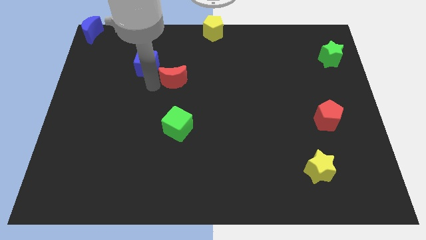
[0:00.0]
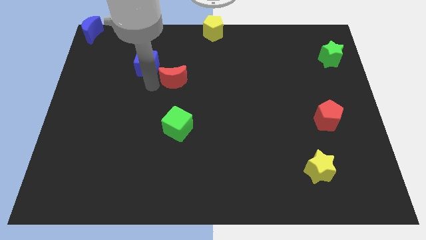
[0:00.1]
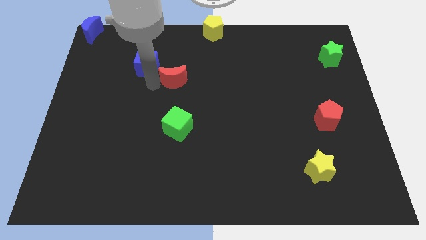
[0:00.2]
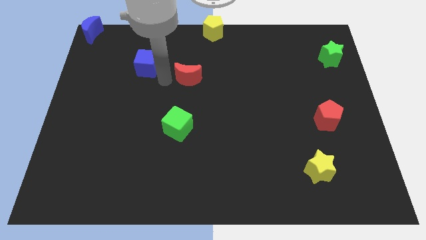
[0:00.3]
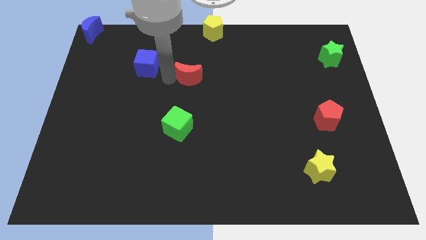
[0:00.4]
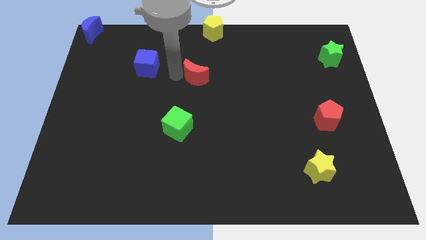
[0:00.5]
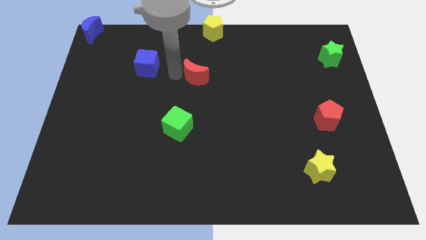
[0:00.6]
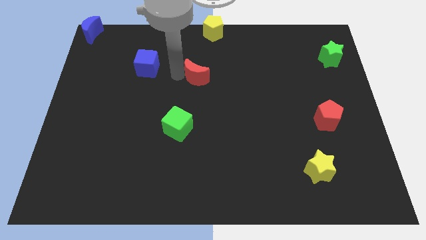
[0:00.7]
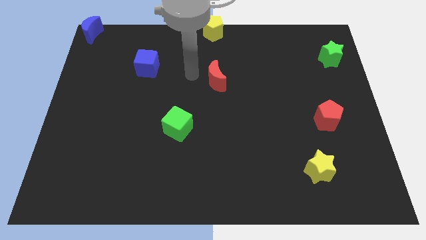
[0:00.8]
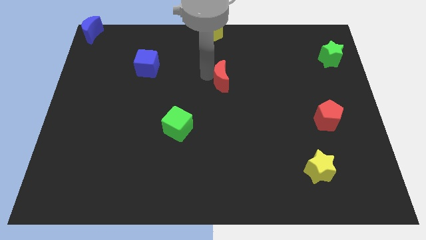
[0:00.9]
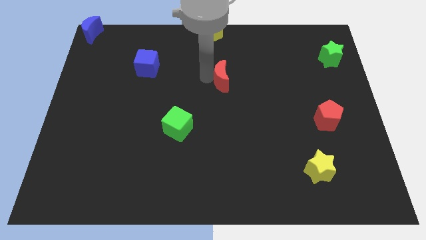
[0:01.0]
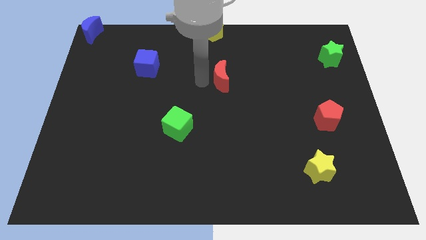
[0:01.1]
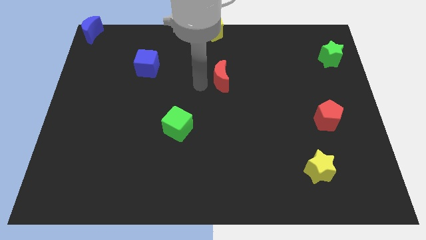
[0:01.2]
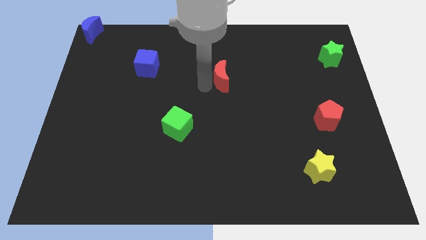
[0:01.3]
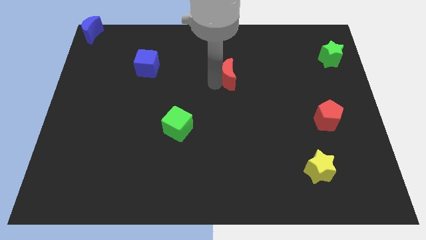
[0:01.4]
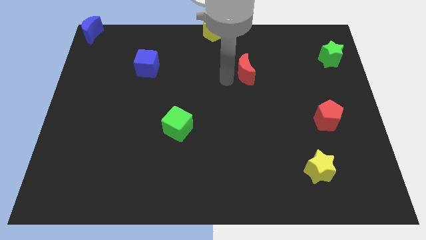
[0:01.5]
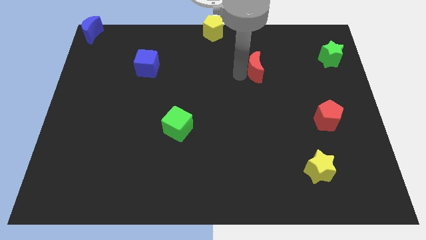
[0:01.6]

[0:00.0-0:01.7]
move the red moon away from the right side of the blue cube

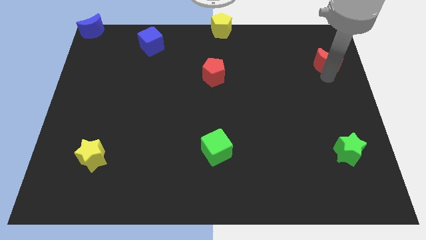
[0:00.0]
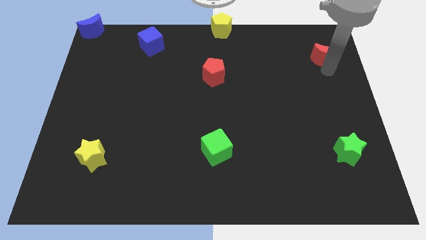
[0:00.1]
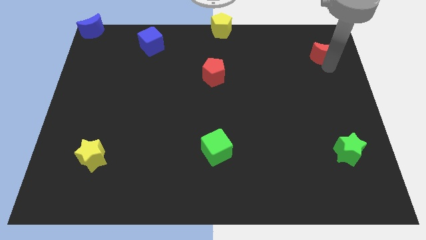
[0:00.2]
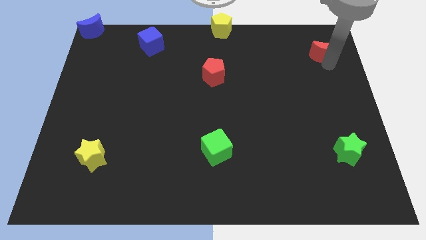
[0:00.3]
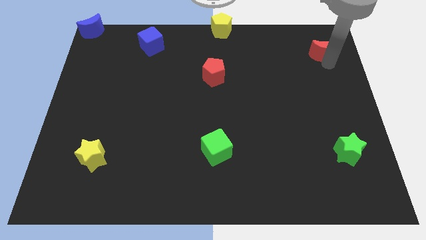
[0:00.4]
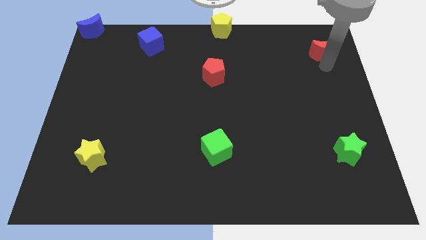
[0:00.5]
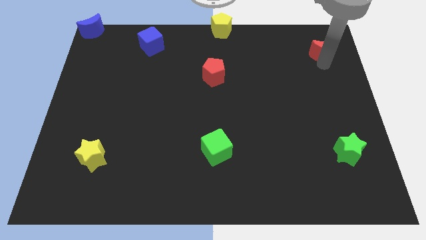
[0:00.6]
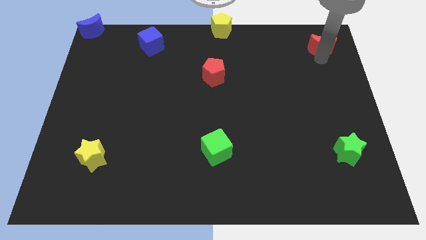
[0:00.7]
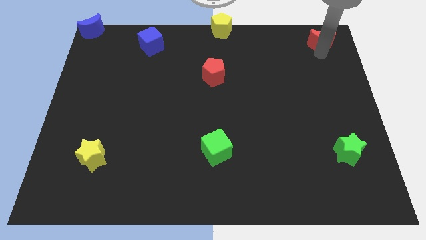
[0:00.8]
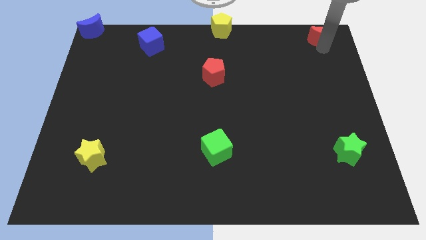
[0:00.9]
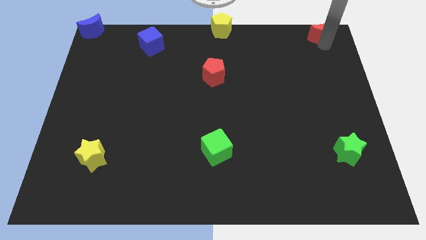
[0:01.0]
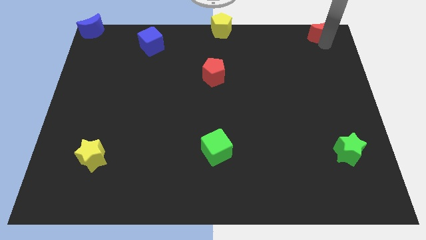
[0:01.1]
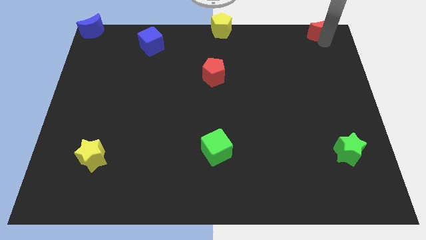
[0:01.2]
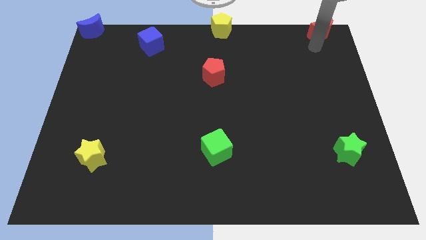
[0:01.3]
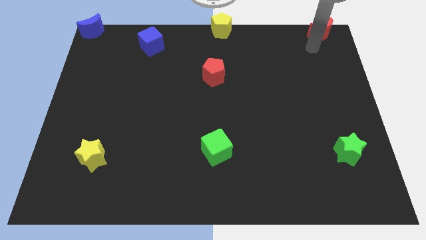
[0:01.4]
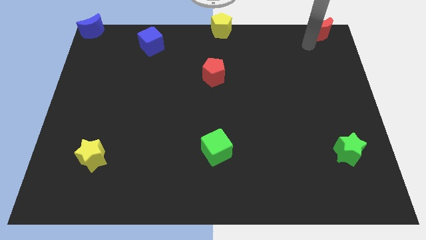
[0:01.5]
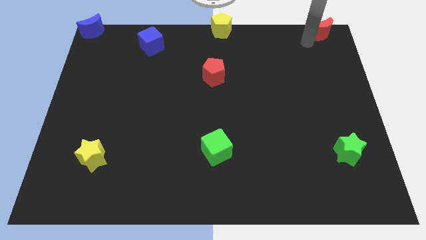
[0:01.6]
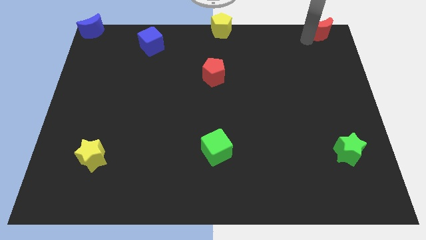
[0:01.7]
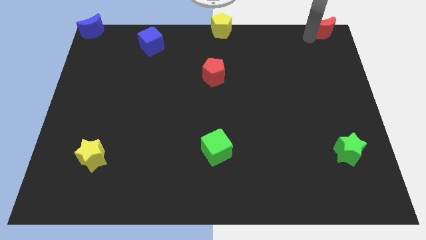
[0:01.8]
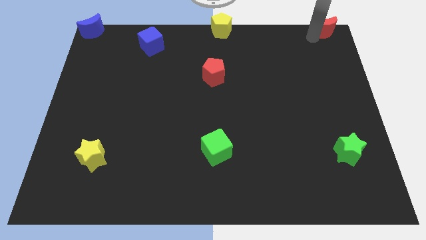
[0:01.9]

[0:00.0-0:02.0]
push the red moon to the top right

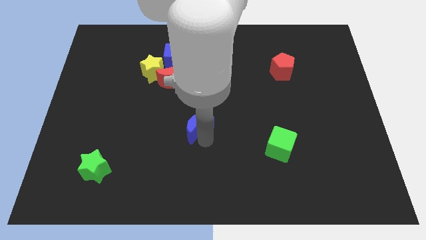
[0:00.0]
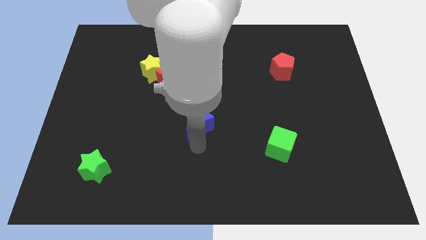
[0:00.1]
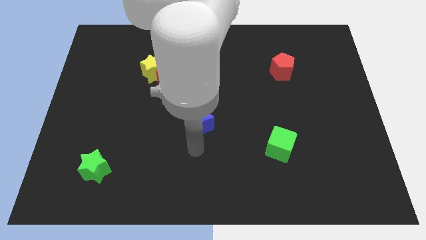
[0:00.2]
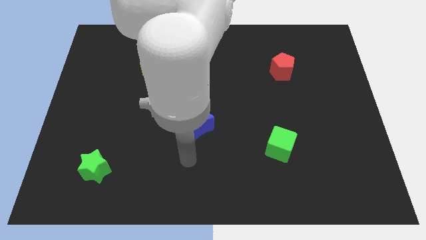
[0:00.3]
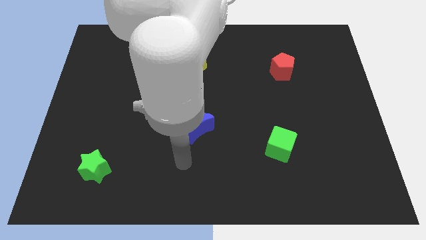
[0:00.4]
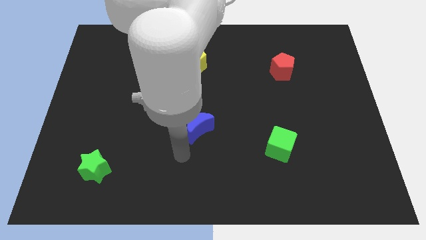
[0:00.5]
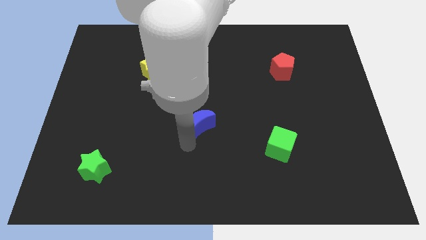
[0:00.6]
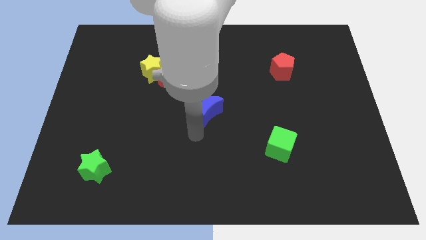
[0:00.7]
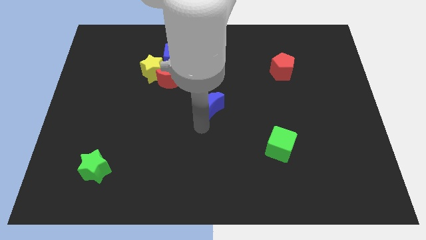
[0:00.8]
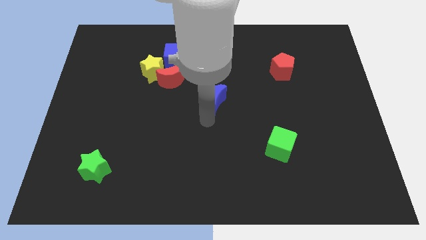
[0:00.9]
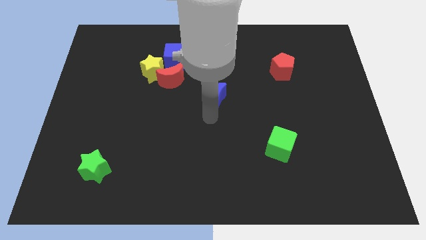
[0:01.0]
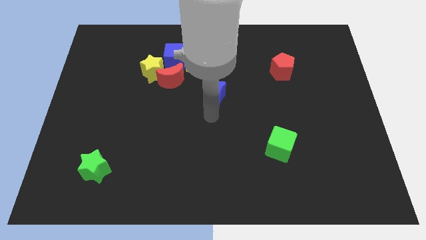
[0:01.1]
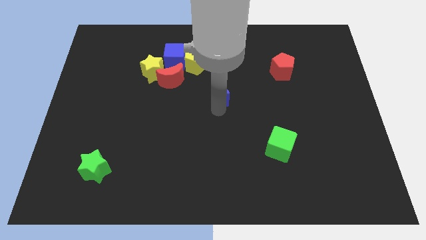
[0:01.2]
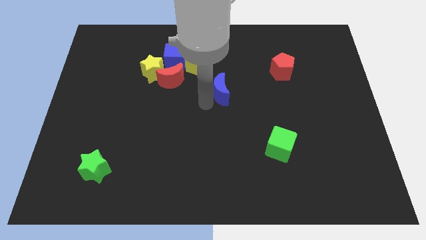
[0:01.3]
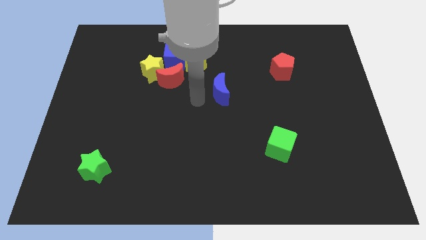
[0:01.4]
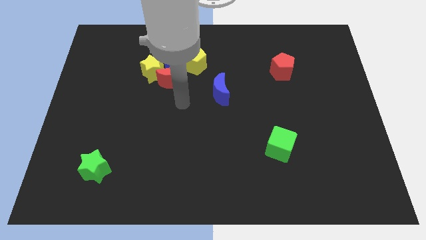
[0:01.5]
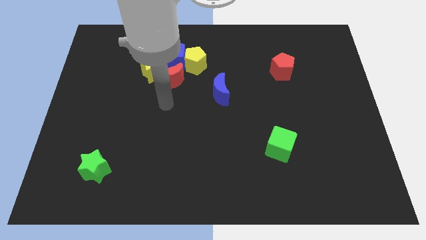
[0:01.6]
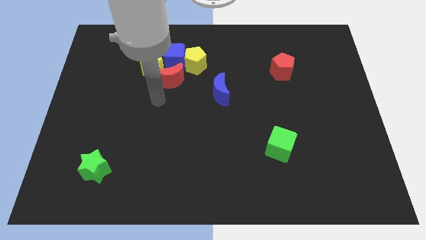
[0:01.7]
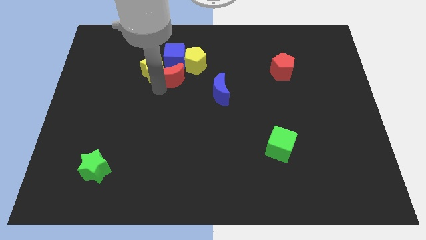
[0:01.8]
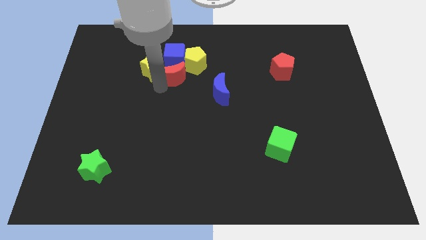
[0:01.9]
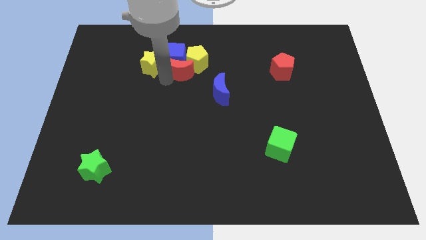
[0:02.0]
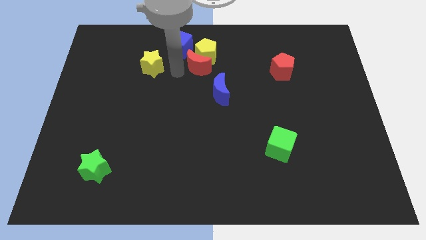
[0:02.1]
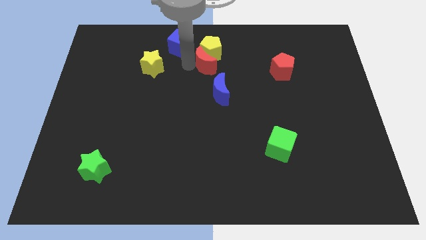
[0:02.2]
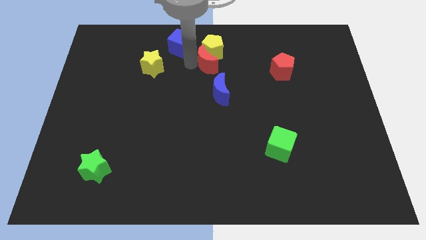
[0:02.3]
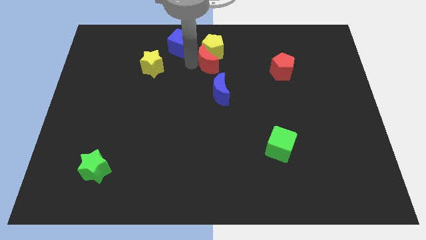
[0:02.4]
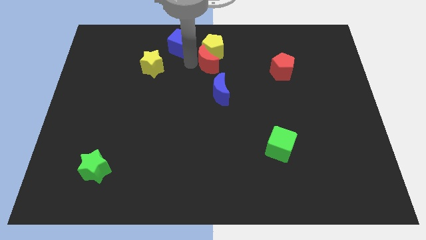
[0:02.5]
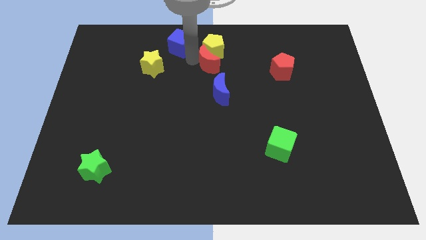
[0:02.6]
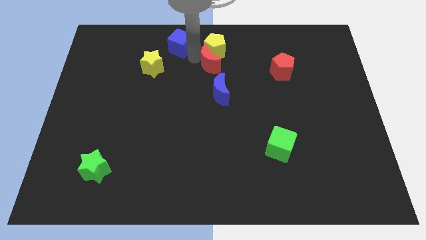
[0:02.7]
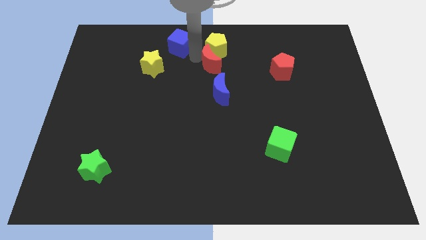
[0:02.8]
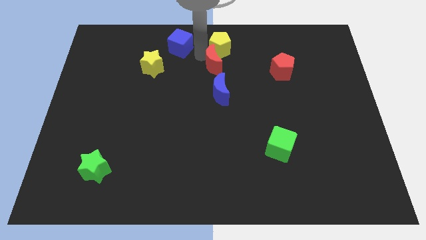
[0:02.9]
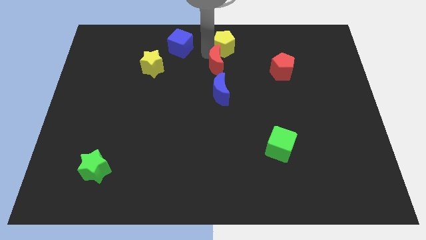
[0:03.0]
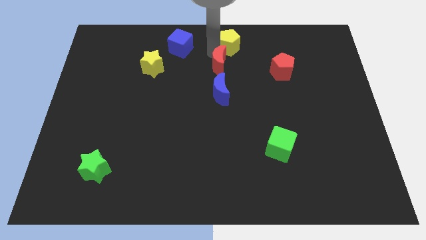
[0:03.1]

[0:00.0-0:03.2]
push red crescent above blue crescent

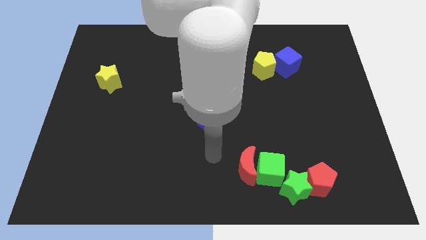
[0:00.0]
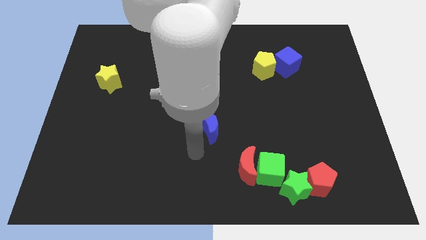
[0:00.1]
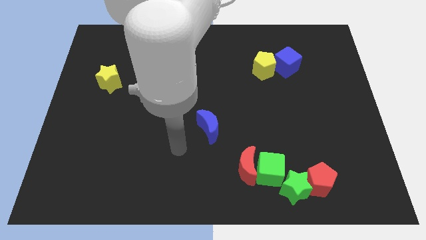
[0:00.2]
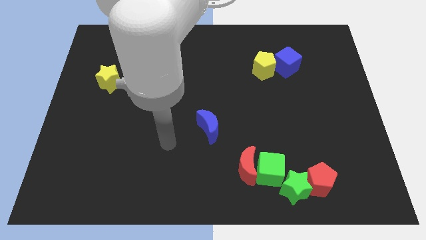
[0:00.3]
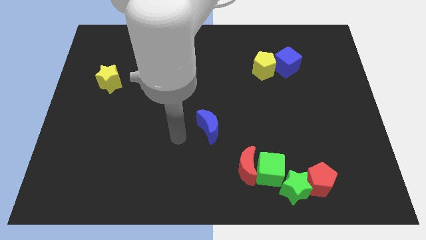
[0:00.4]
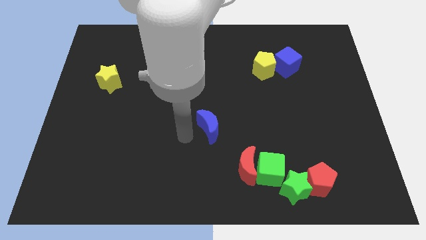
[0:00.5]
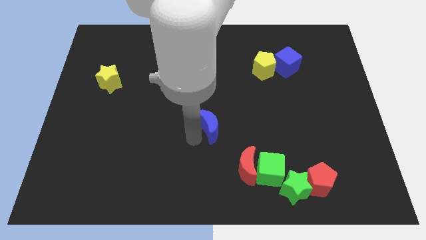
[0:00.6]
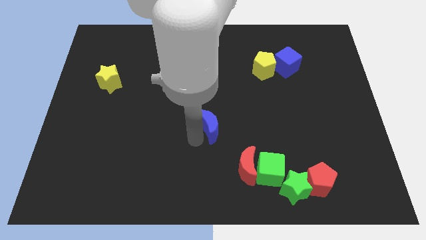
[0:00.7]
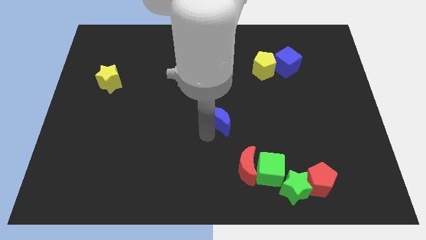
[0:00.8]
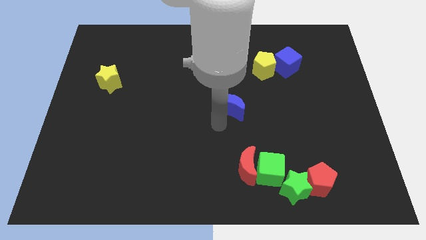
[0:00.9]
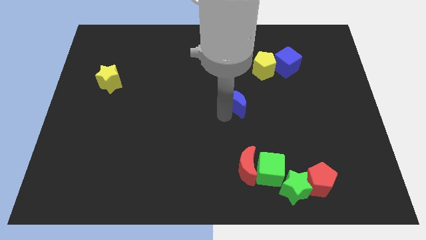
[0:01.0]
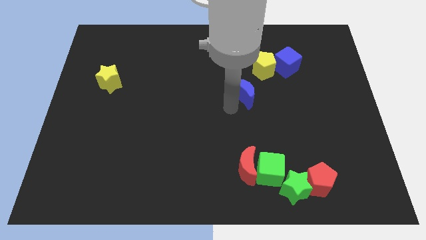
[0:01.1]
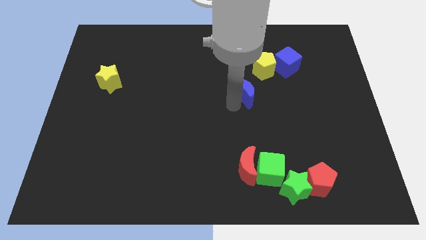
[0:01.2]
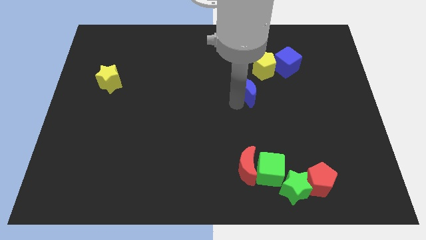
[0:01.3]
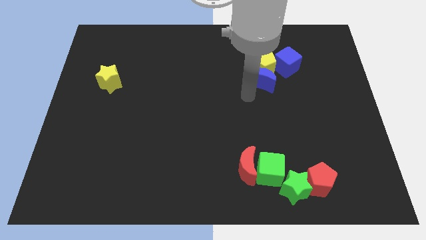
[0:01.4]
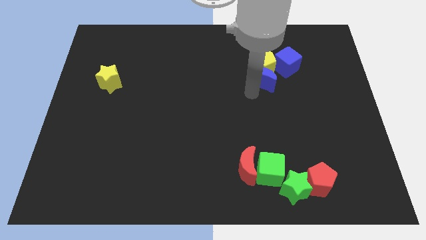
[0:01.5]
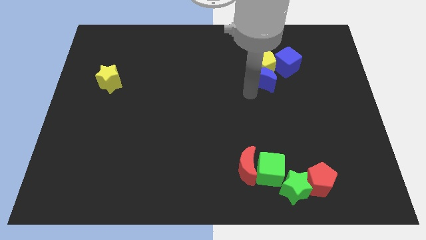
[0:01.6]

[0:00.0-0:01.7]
push the blue crescent into the yellow pentagon

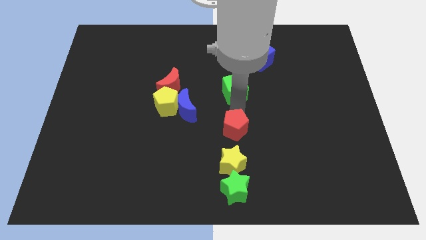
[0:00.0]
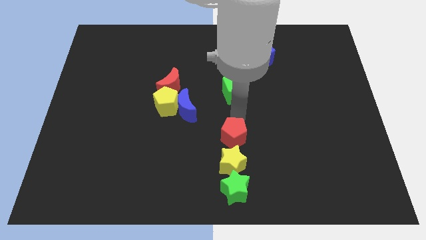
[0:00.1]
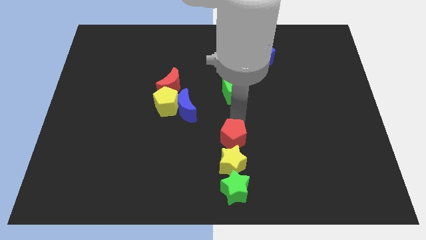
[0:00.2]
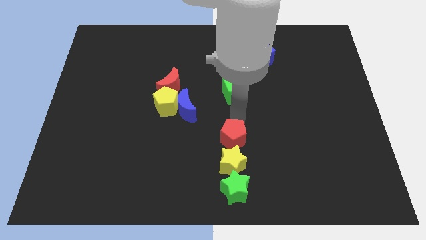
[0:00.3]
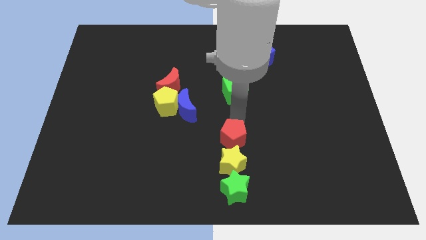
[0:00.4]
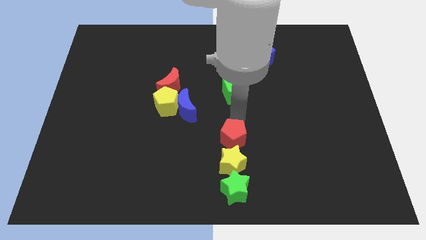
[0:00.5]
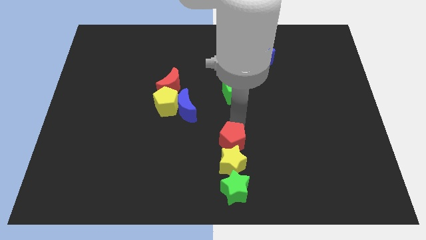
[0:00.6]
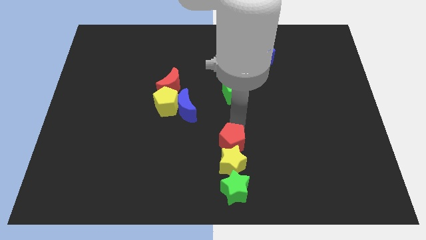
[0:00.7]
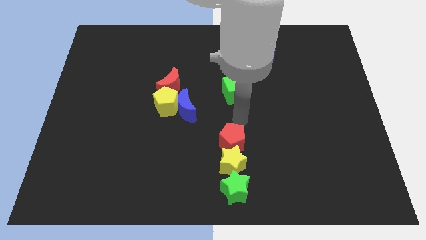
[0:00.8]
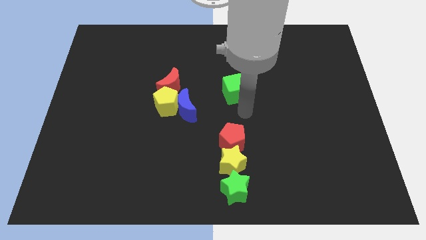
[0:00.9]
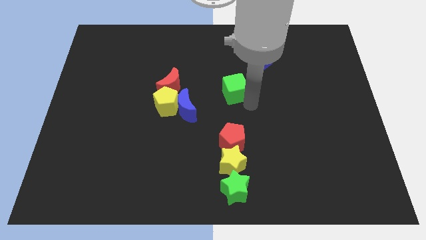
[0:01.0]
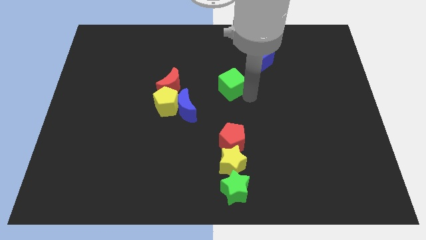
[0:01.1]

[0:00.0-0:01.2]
move your arm away from red pentagon
